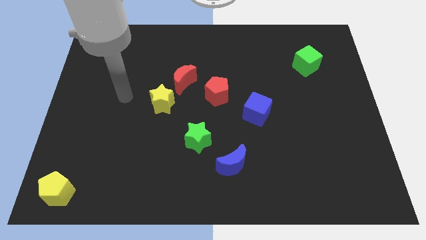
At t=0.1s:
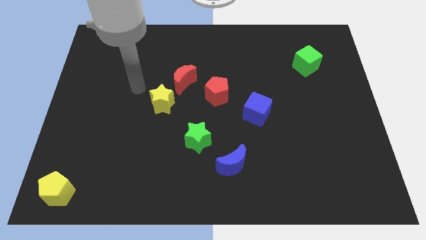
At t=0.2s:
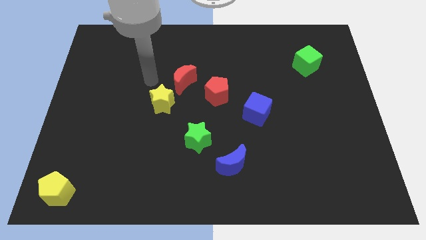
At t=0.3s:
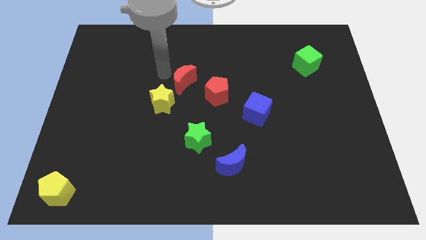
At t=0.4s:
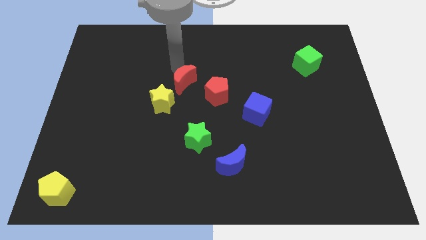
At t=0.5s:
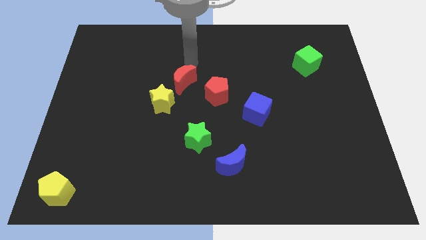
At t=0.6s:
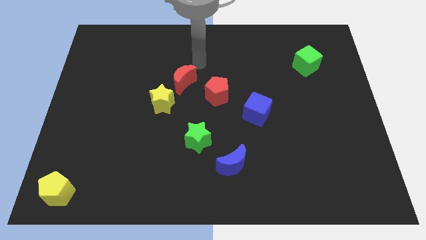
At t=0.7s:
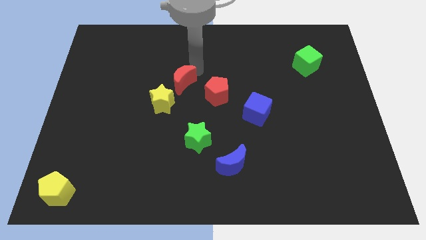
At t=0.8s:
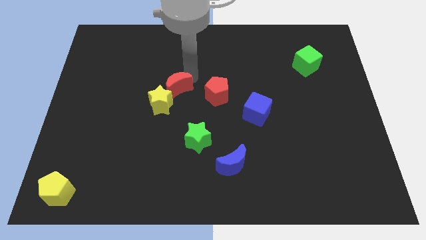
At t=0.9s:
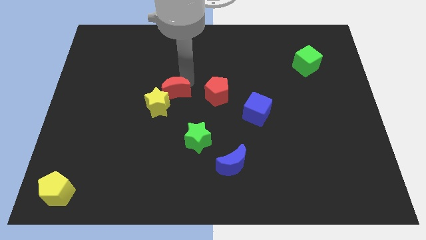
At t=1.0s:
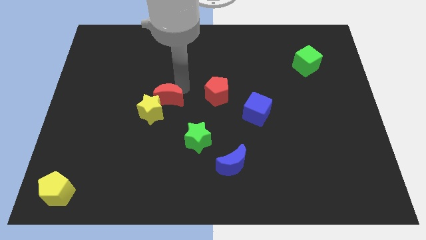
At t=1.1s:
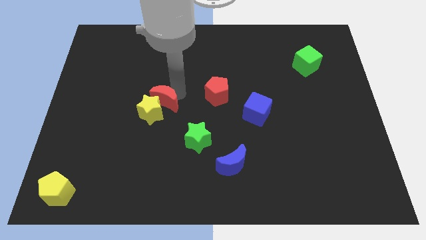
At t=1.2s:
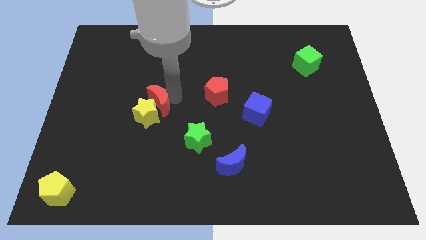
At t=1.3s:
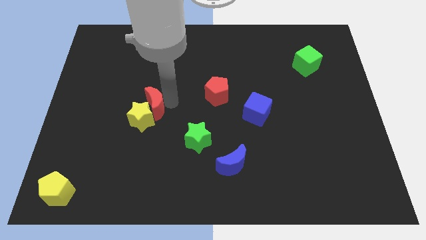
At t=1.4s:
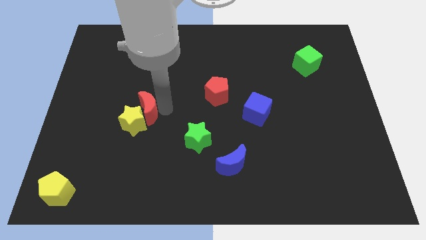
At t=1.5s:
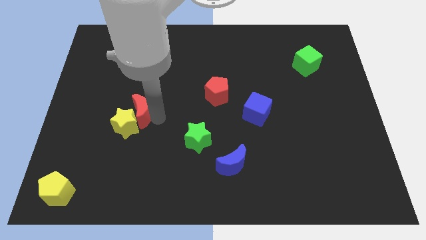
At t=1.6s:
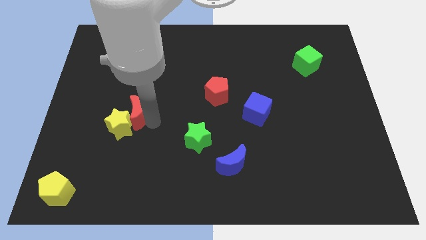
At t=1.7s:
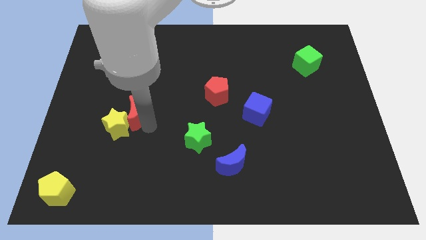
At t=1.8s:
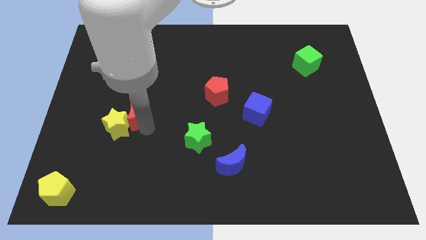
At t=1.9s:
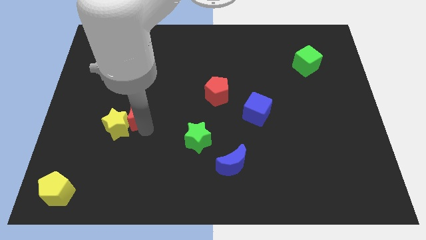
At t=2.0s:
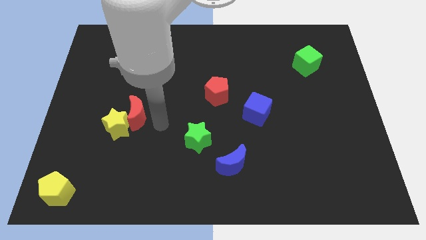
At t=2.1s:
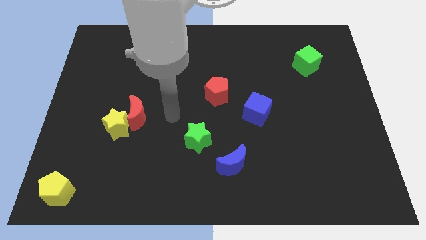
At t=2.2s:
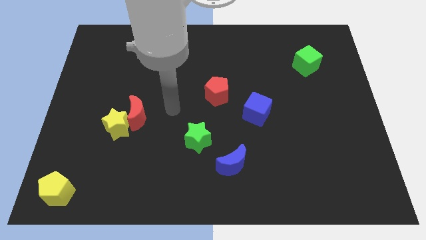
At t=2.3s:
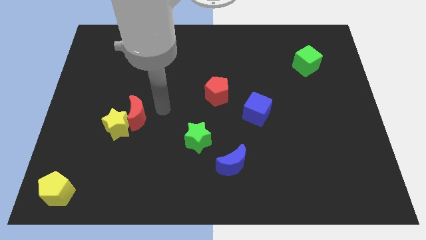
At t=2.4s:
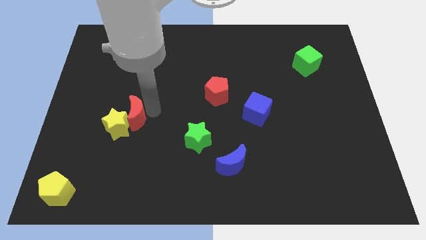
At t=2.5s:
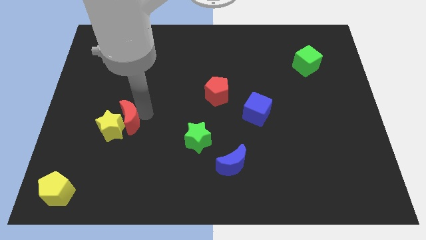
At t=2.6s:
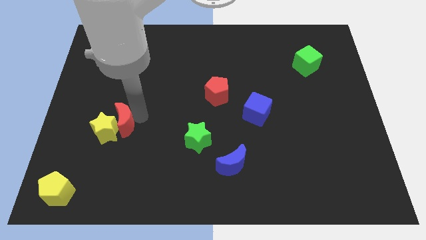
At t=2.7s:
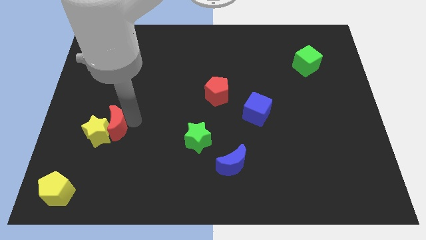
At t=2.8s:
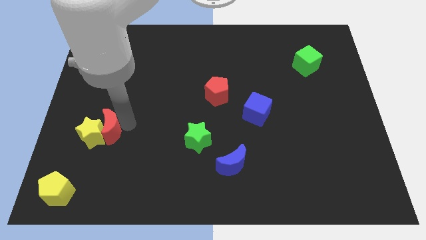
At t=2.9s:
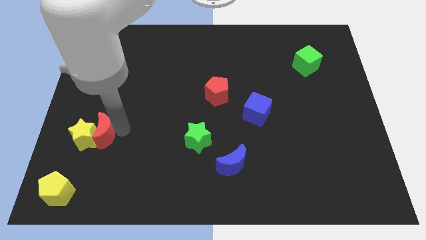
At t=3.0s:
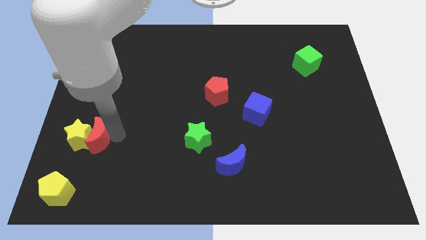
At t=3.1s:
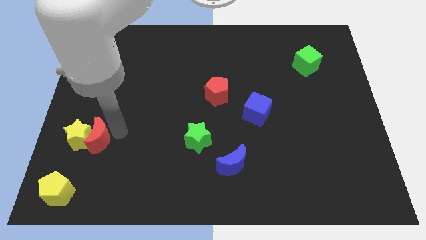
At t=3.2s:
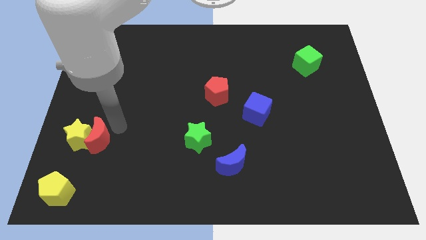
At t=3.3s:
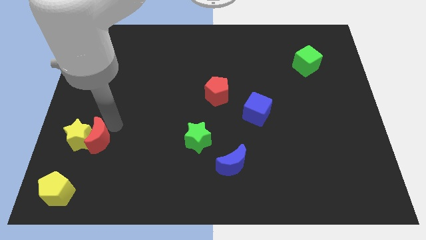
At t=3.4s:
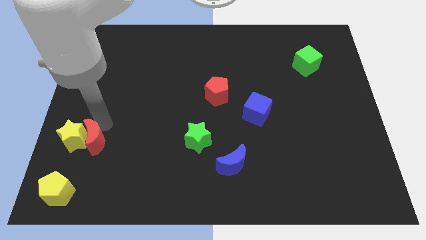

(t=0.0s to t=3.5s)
push the red moon into the yellow star

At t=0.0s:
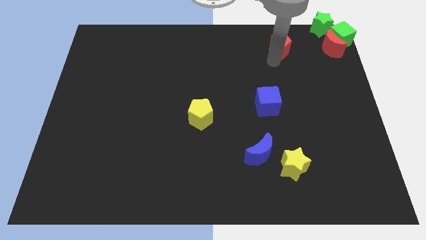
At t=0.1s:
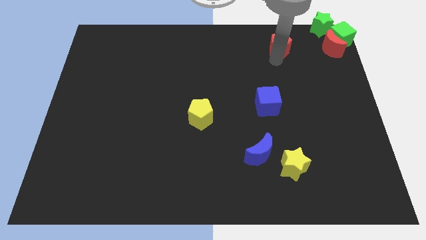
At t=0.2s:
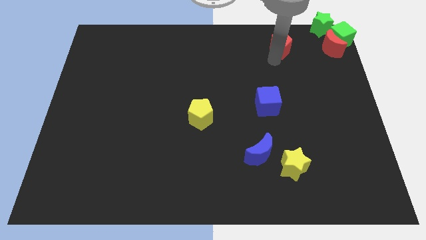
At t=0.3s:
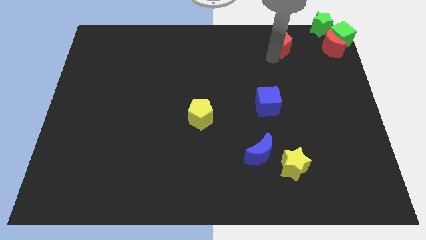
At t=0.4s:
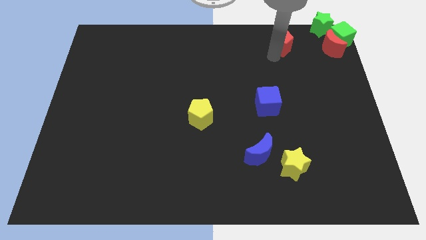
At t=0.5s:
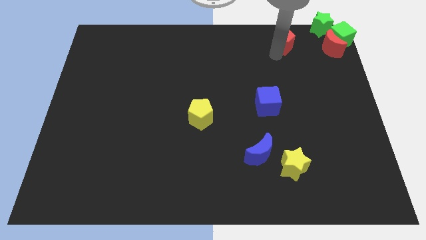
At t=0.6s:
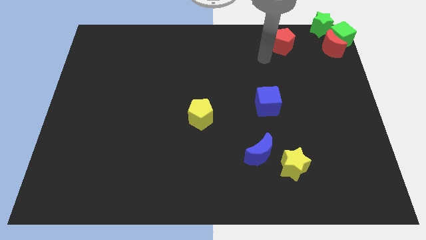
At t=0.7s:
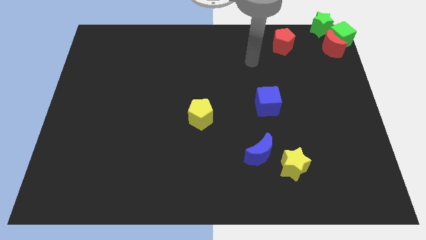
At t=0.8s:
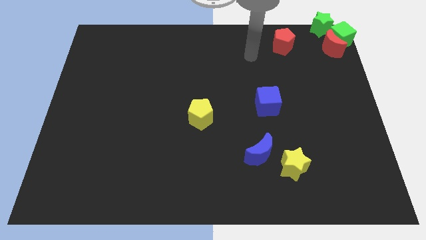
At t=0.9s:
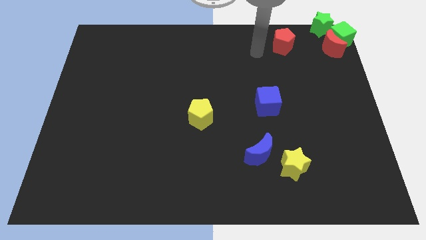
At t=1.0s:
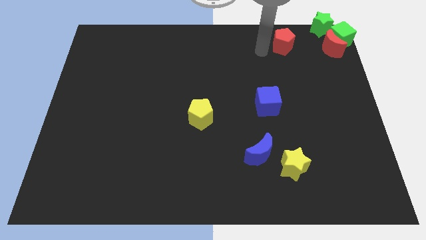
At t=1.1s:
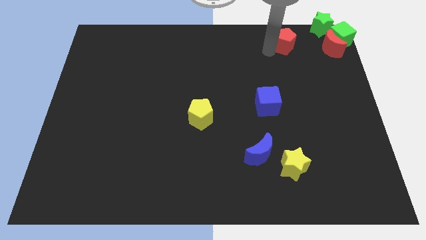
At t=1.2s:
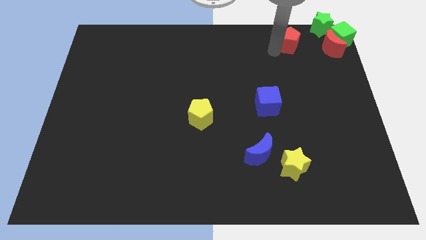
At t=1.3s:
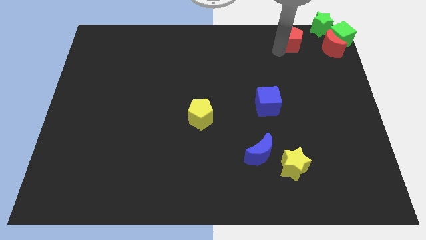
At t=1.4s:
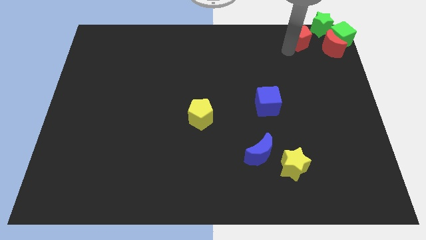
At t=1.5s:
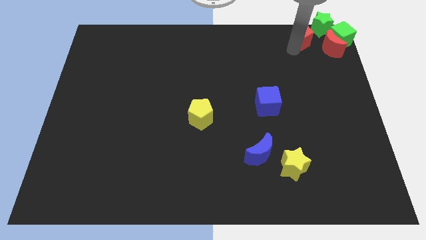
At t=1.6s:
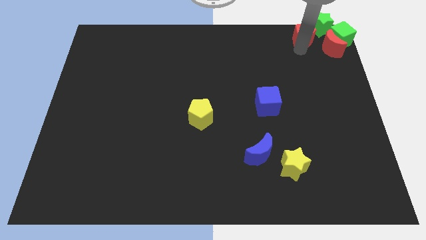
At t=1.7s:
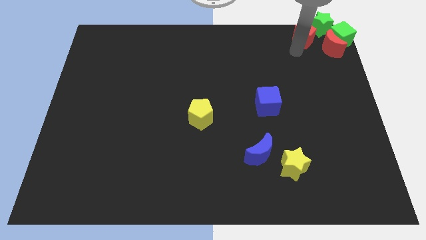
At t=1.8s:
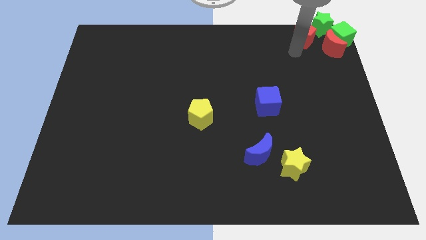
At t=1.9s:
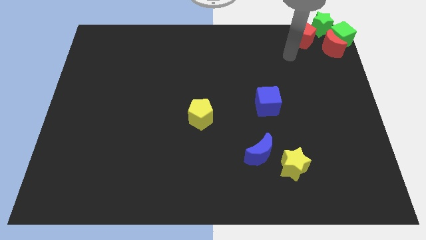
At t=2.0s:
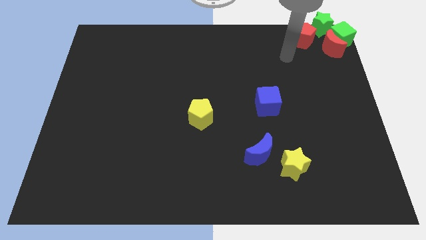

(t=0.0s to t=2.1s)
move the red pentagon into the group of blocks

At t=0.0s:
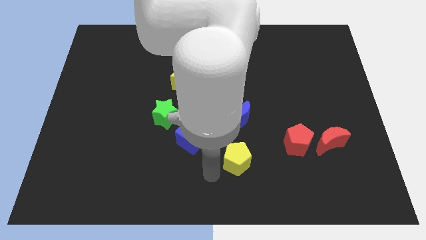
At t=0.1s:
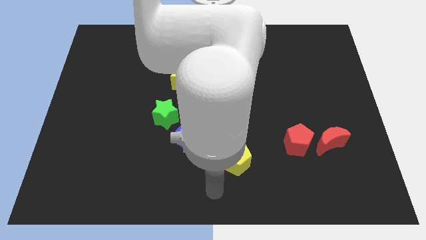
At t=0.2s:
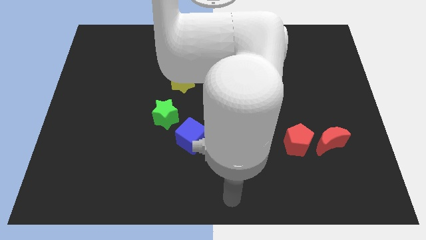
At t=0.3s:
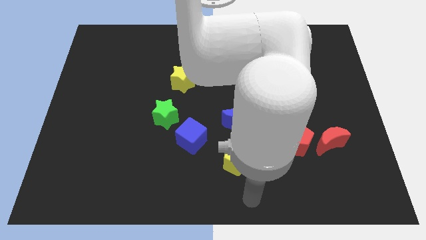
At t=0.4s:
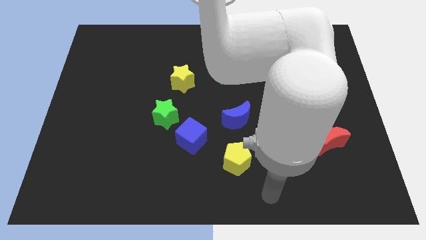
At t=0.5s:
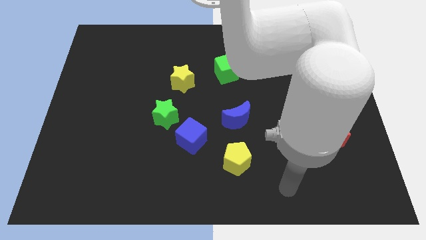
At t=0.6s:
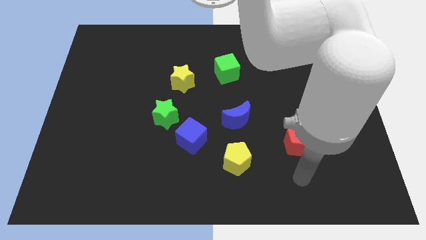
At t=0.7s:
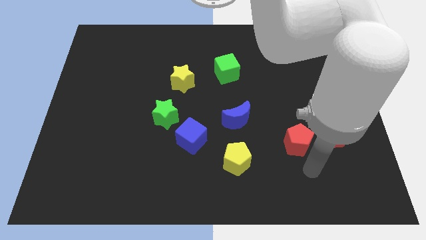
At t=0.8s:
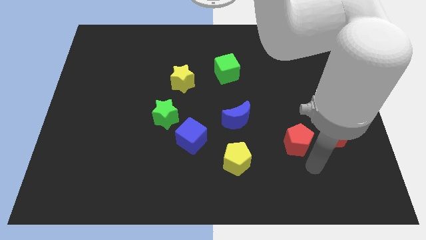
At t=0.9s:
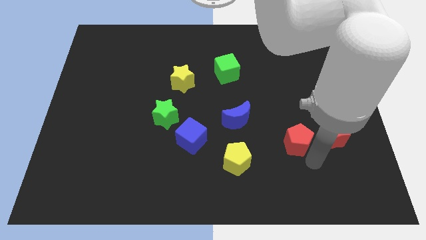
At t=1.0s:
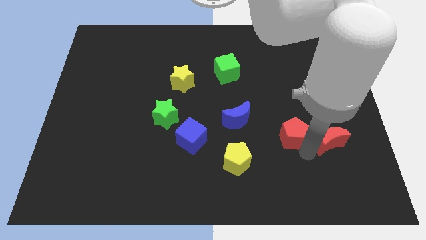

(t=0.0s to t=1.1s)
tap the bottom right side of the red pentagon

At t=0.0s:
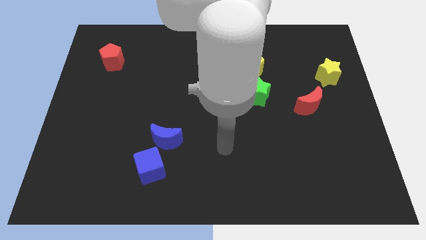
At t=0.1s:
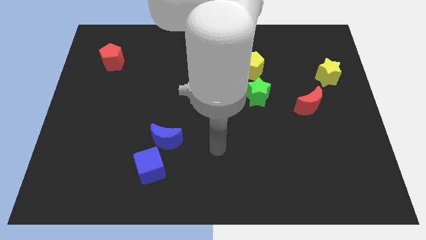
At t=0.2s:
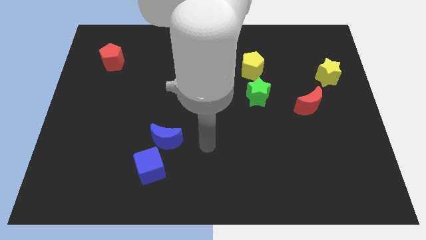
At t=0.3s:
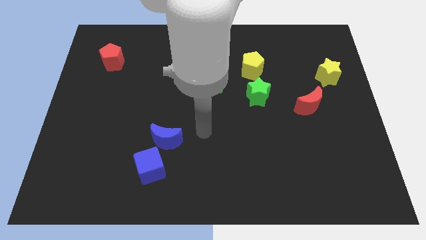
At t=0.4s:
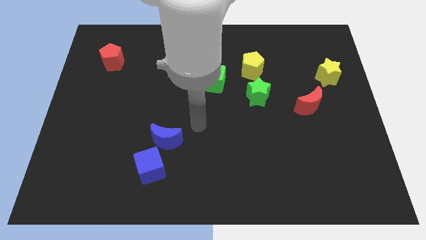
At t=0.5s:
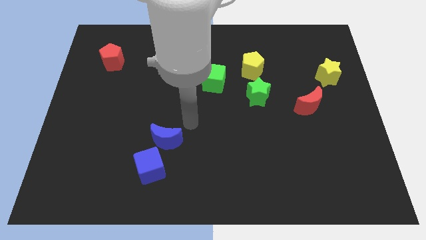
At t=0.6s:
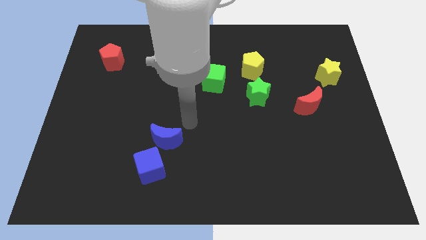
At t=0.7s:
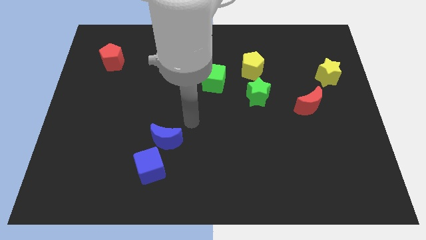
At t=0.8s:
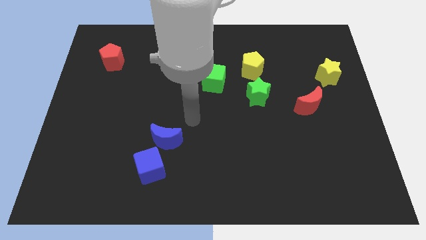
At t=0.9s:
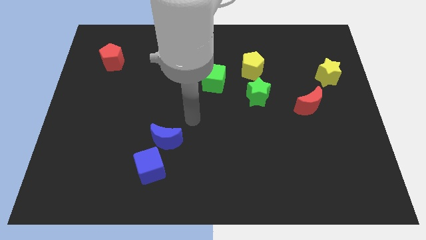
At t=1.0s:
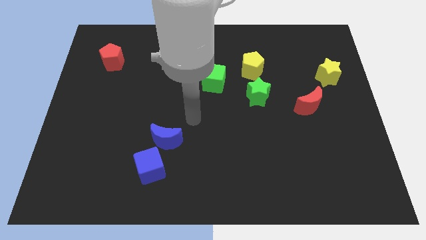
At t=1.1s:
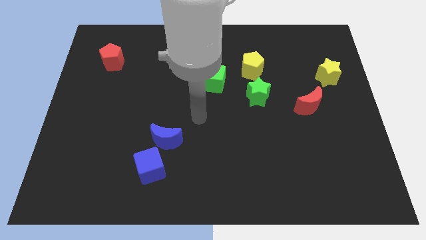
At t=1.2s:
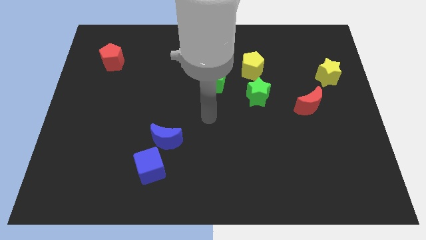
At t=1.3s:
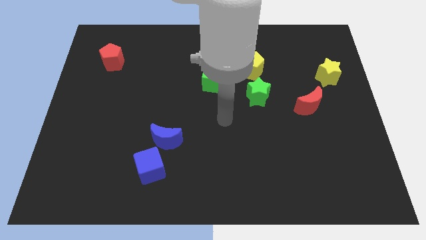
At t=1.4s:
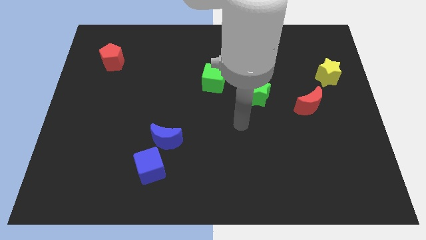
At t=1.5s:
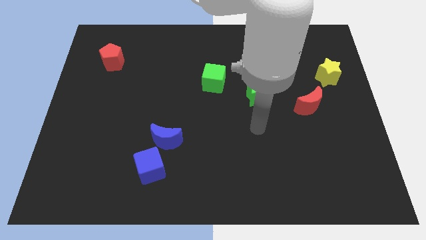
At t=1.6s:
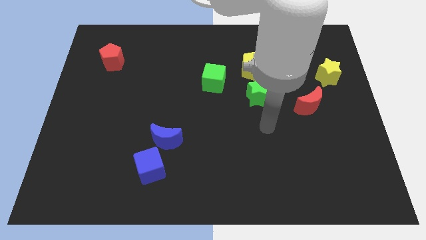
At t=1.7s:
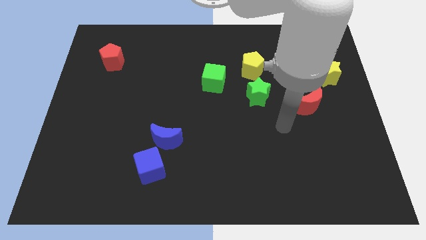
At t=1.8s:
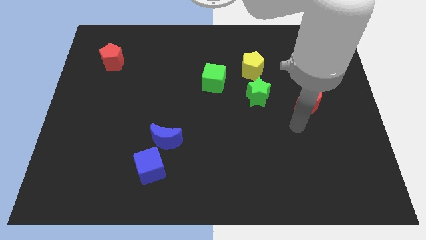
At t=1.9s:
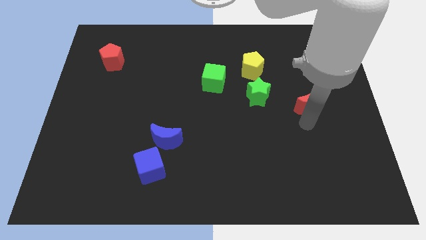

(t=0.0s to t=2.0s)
move the arm to the red crescent
